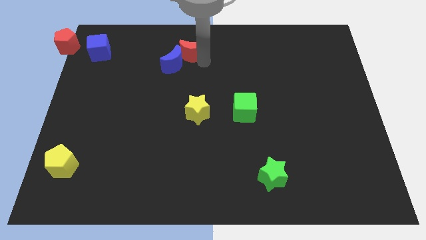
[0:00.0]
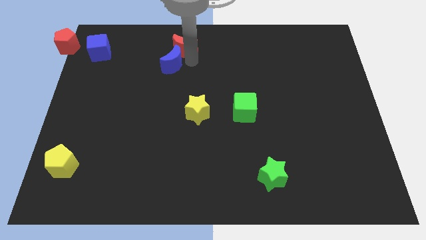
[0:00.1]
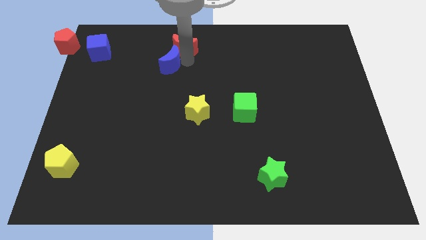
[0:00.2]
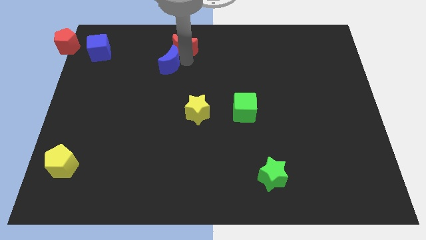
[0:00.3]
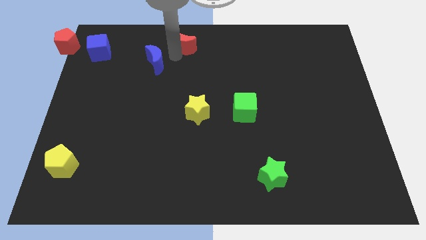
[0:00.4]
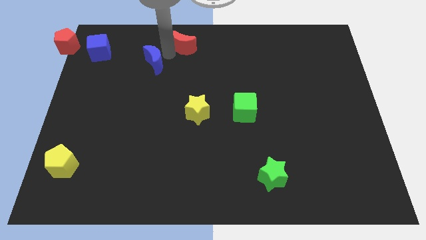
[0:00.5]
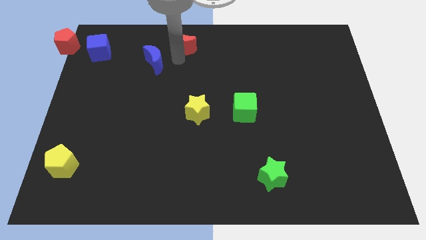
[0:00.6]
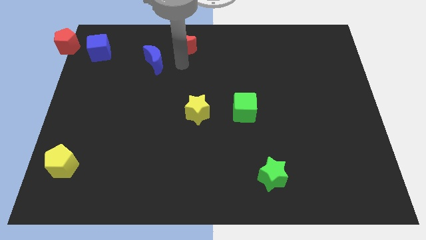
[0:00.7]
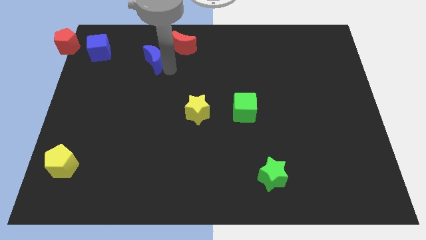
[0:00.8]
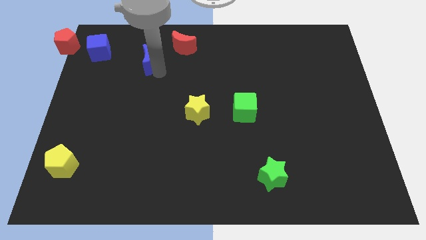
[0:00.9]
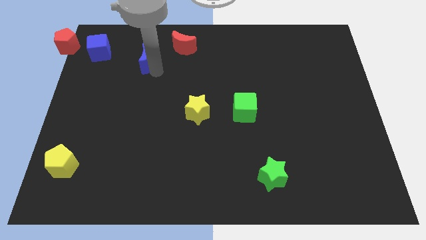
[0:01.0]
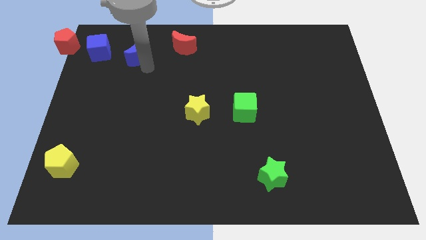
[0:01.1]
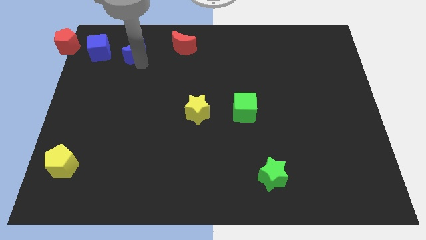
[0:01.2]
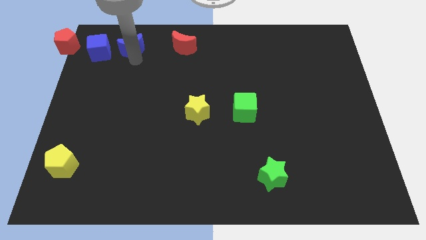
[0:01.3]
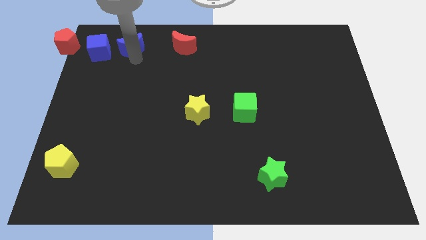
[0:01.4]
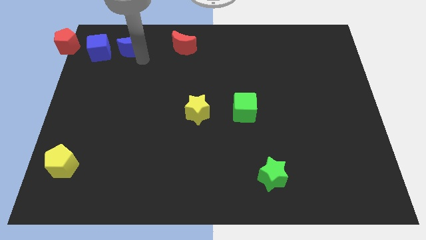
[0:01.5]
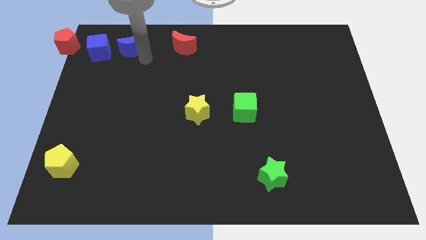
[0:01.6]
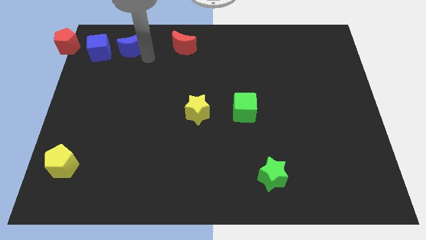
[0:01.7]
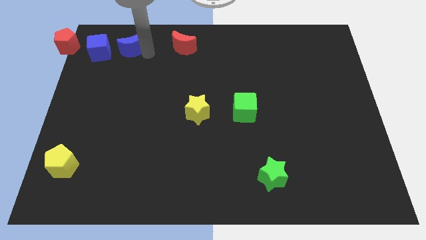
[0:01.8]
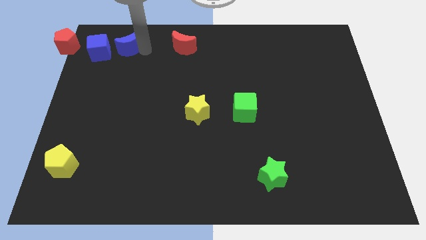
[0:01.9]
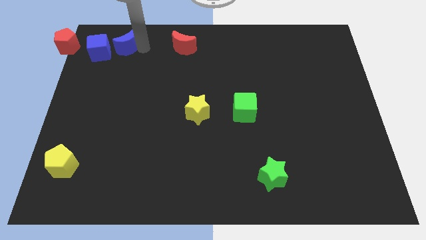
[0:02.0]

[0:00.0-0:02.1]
push blue crescent beside blue cube

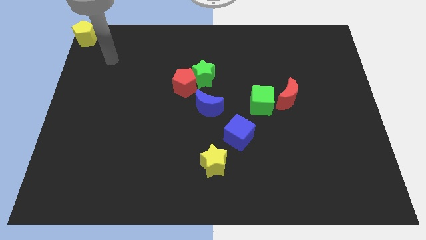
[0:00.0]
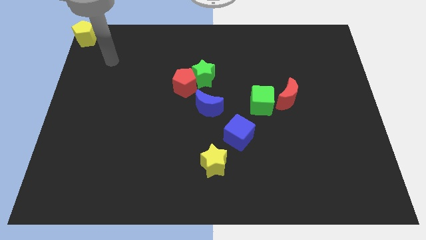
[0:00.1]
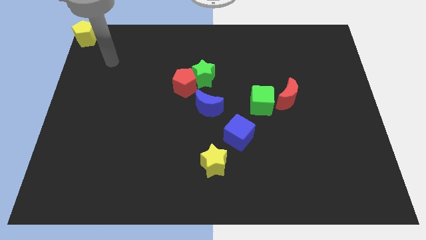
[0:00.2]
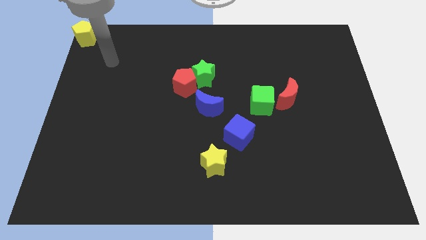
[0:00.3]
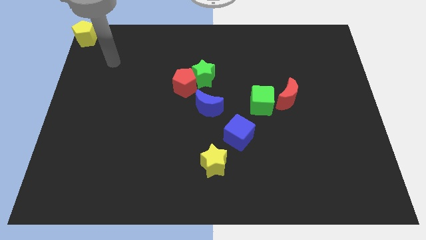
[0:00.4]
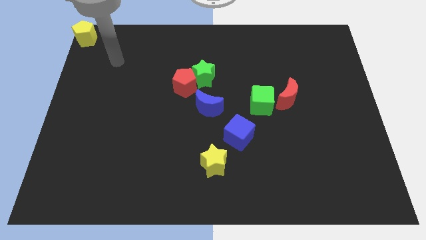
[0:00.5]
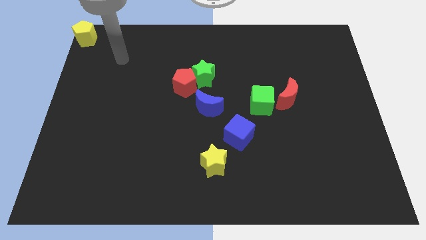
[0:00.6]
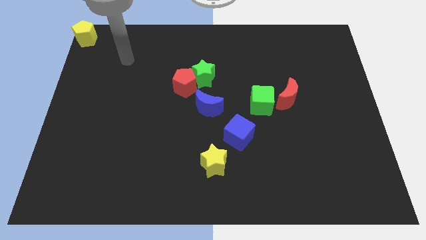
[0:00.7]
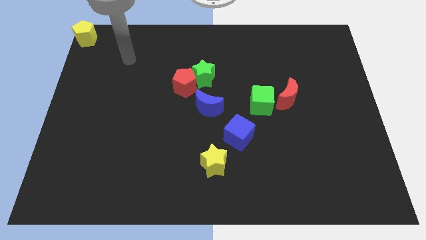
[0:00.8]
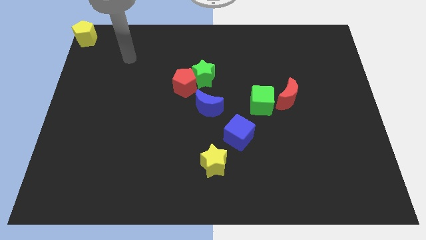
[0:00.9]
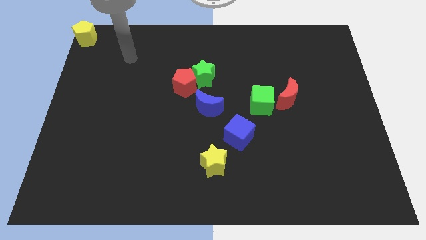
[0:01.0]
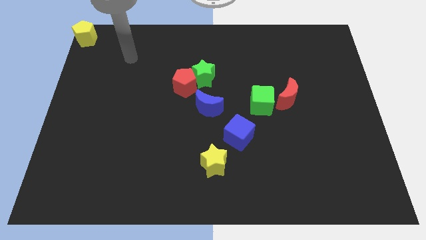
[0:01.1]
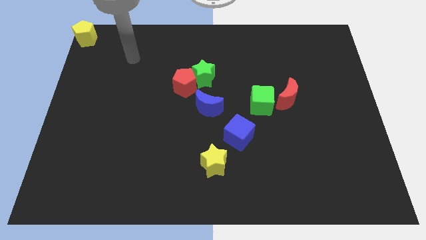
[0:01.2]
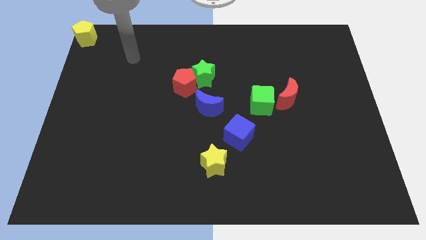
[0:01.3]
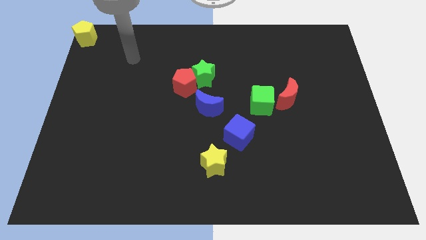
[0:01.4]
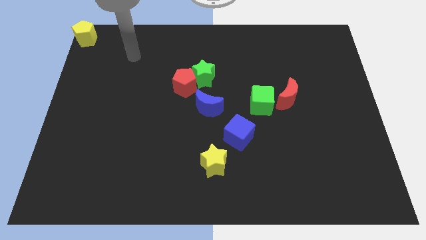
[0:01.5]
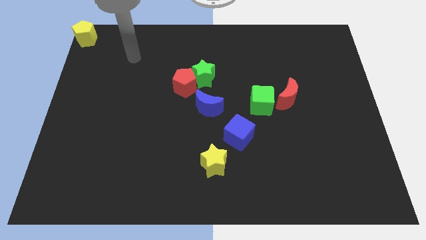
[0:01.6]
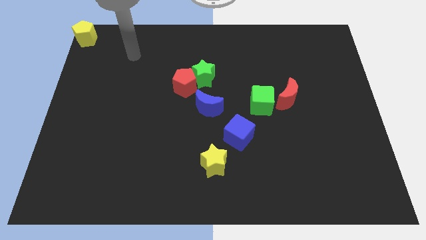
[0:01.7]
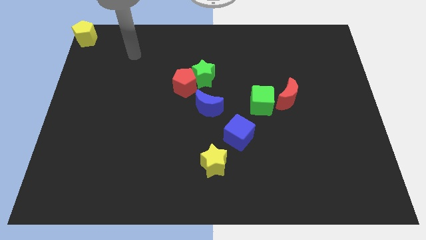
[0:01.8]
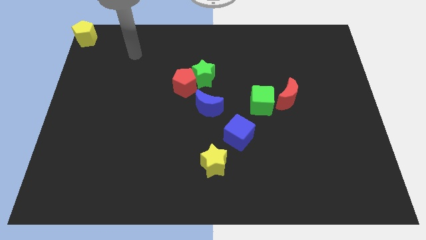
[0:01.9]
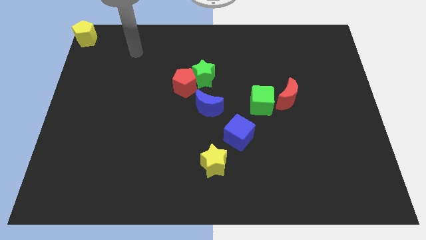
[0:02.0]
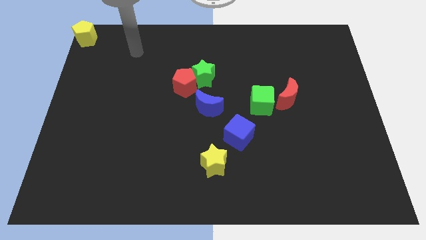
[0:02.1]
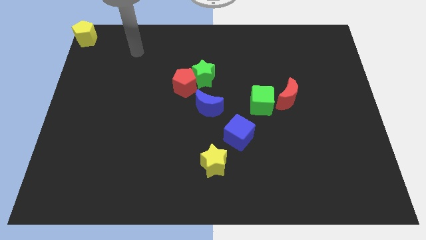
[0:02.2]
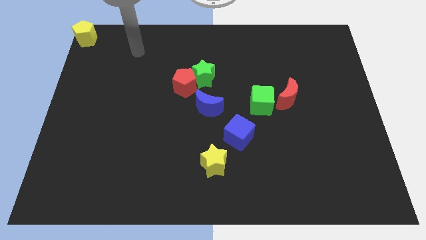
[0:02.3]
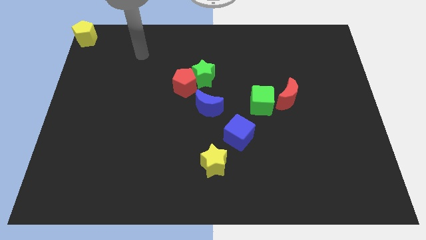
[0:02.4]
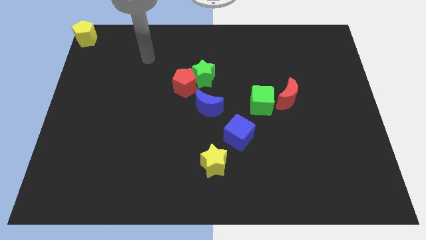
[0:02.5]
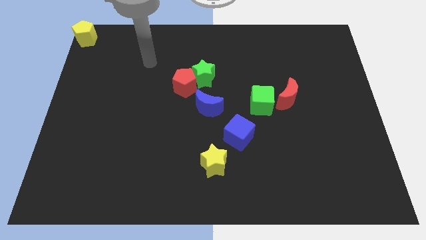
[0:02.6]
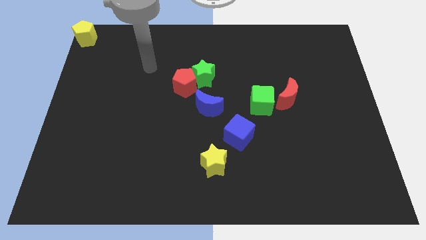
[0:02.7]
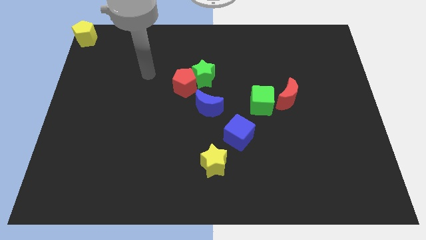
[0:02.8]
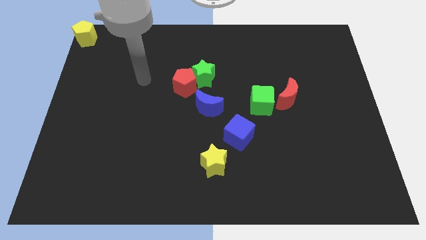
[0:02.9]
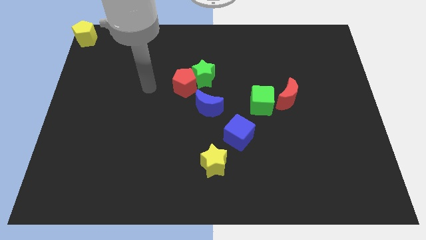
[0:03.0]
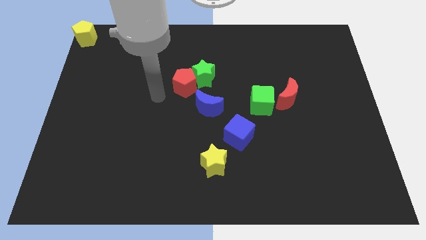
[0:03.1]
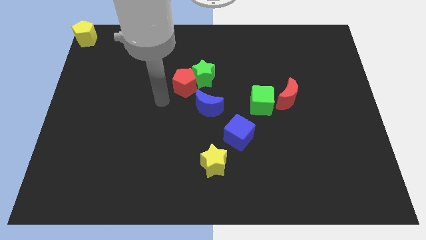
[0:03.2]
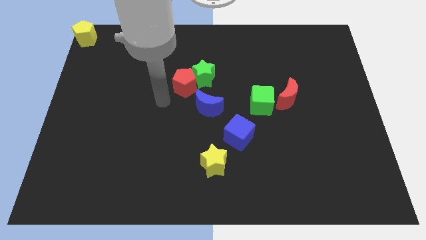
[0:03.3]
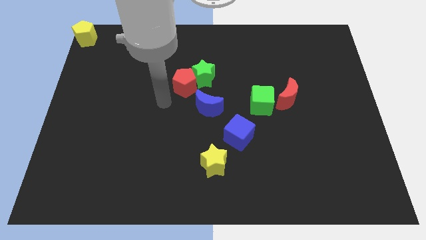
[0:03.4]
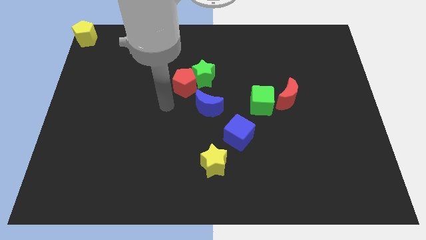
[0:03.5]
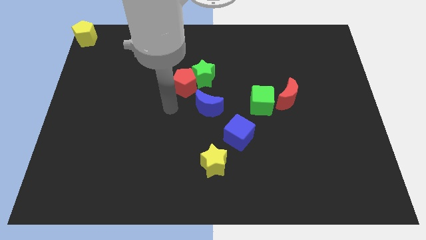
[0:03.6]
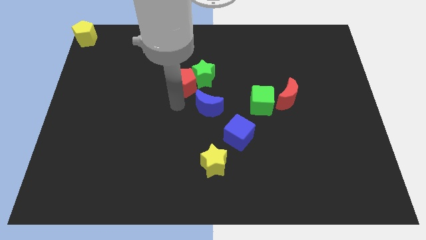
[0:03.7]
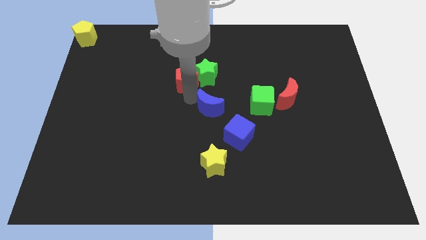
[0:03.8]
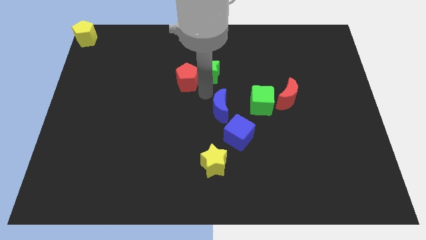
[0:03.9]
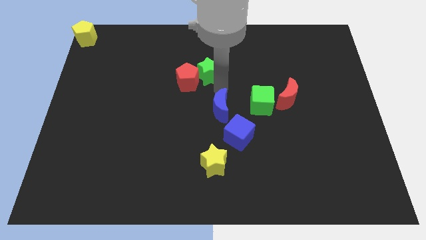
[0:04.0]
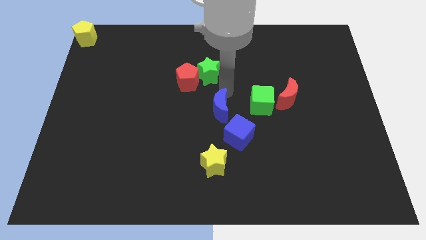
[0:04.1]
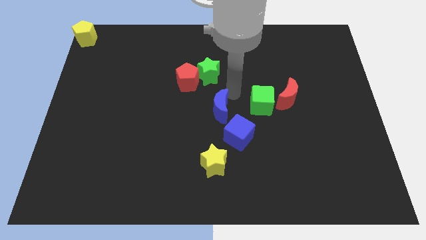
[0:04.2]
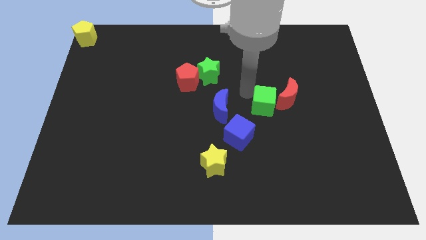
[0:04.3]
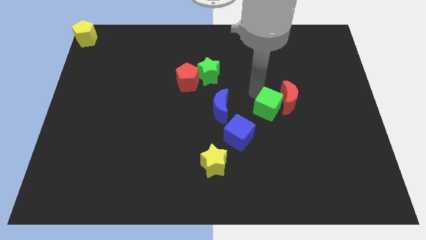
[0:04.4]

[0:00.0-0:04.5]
separate red pentagon and green star from blue moon

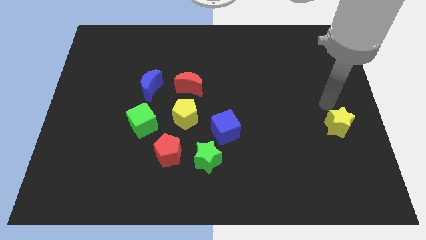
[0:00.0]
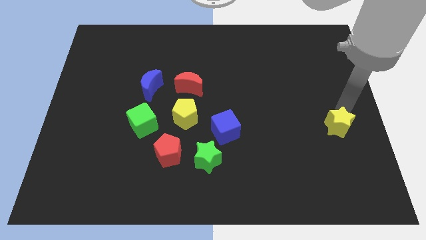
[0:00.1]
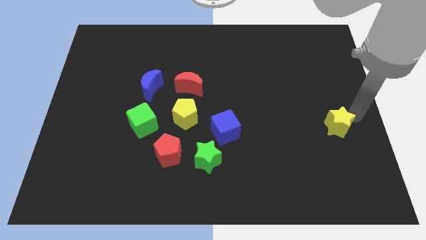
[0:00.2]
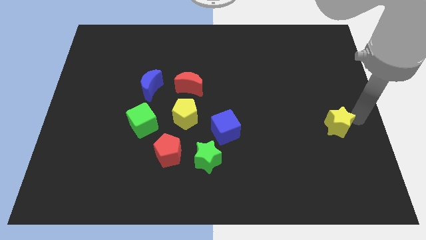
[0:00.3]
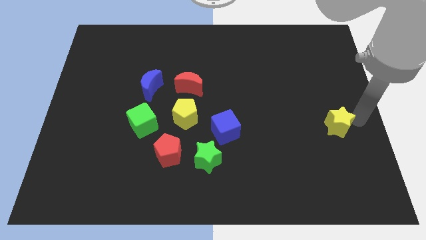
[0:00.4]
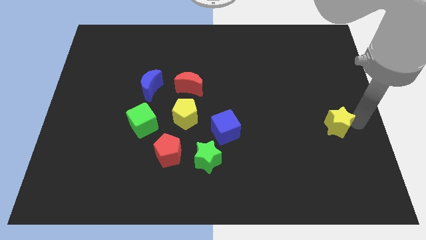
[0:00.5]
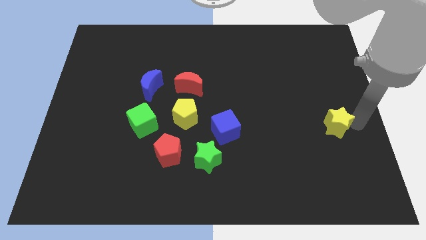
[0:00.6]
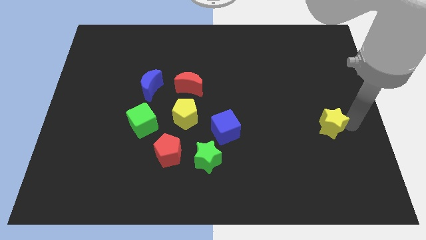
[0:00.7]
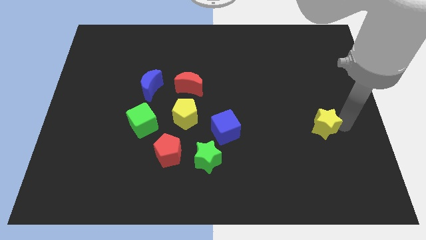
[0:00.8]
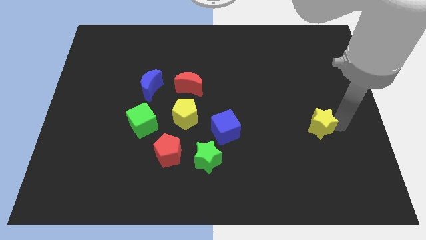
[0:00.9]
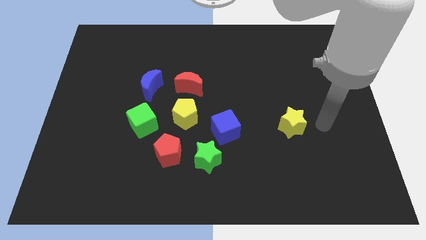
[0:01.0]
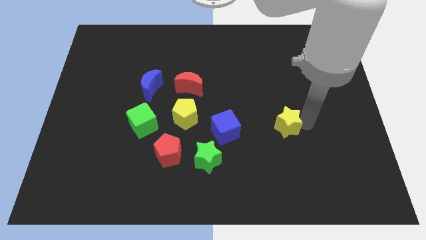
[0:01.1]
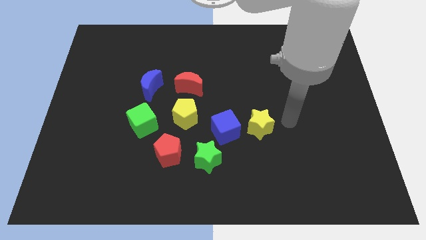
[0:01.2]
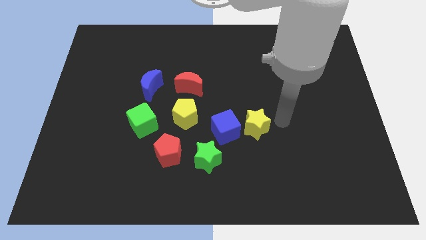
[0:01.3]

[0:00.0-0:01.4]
push the yellow star towards the blue cube

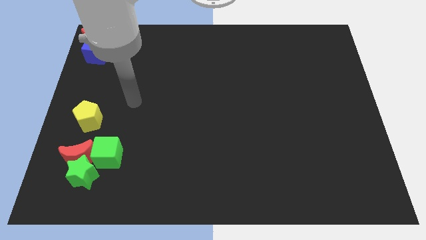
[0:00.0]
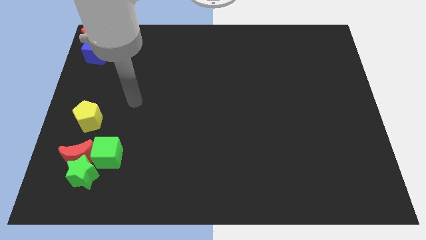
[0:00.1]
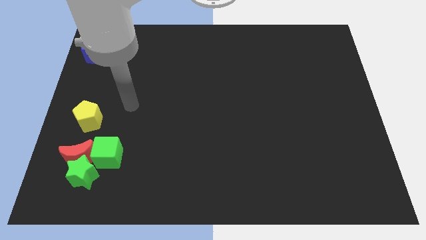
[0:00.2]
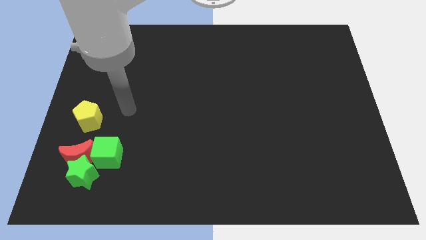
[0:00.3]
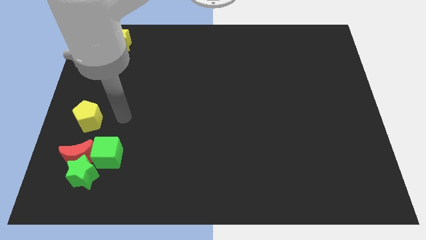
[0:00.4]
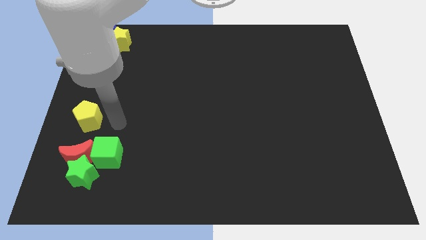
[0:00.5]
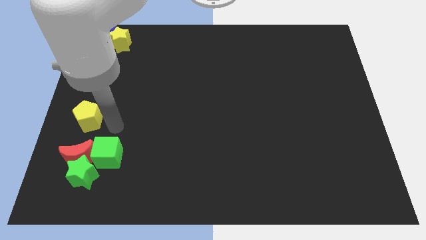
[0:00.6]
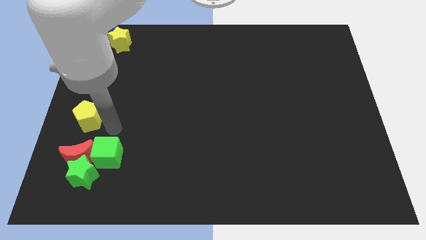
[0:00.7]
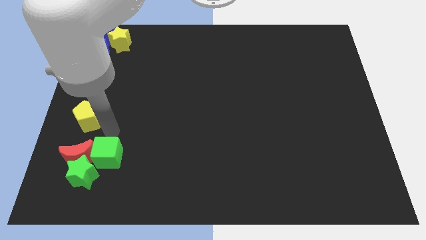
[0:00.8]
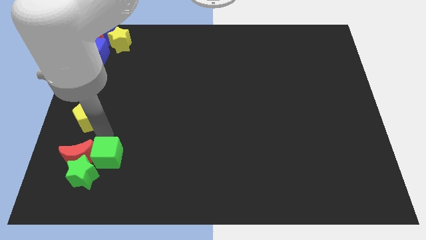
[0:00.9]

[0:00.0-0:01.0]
move your arm to the top of green cube

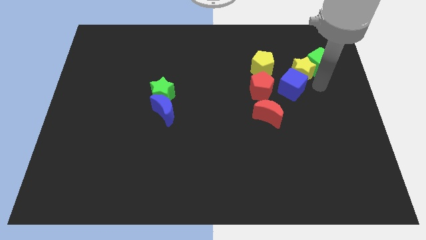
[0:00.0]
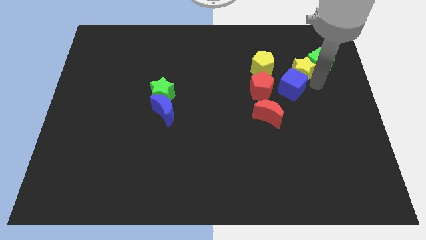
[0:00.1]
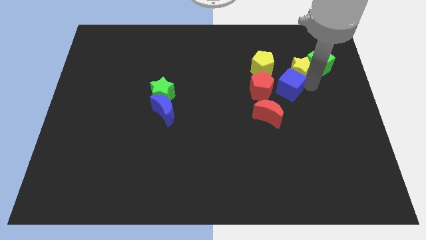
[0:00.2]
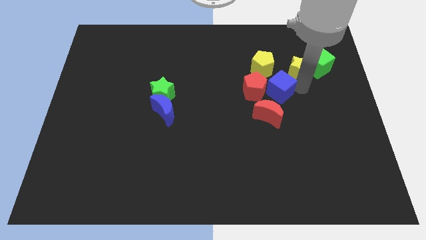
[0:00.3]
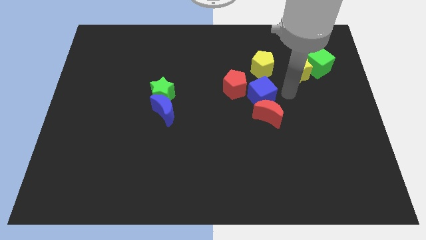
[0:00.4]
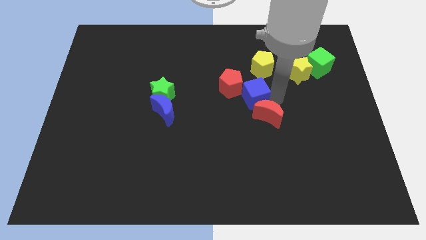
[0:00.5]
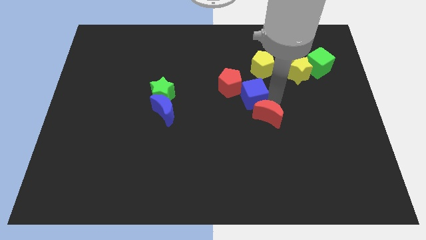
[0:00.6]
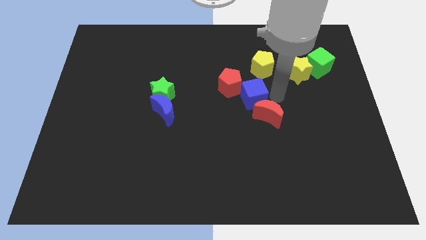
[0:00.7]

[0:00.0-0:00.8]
push the blue cube into the red pentagon
